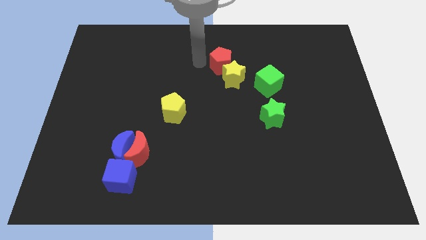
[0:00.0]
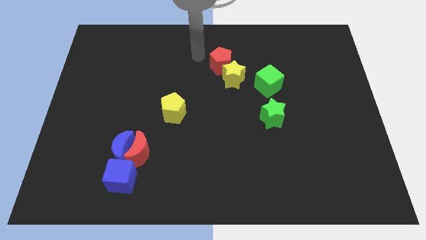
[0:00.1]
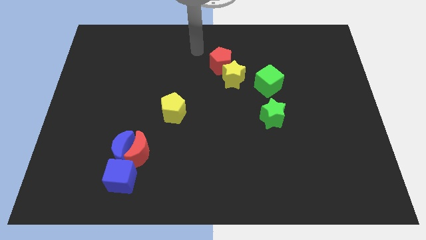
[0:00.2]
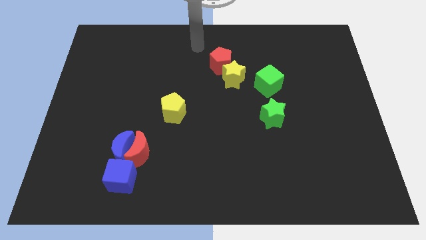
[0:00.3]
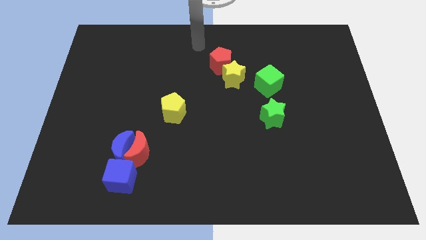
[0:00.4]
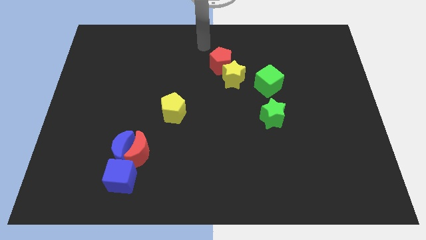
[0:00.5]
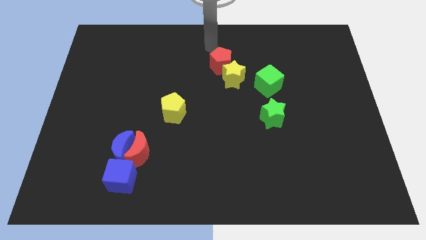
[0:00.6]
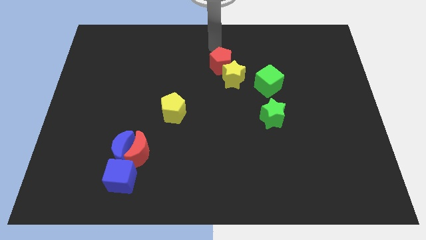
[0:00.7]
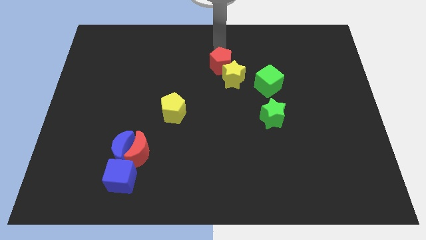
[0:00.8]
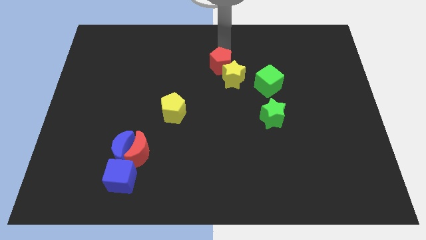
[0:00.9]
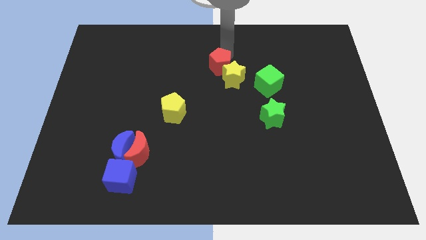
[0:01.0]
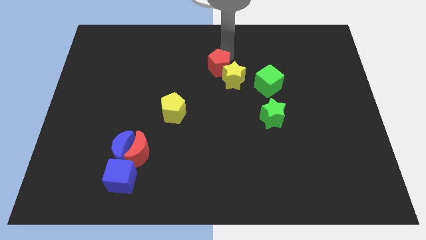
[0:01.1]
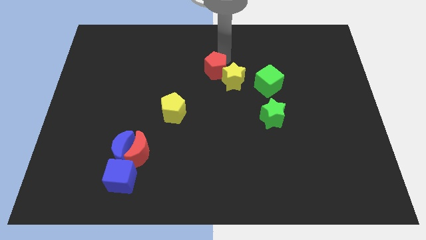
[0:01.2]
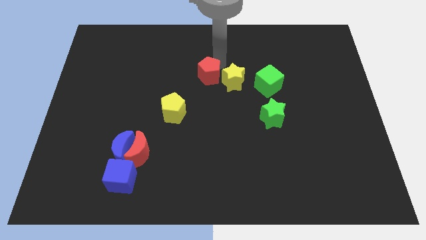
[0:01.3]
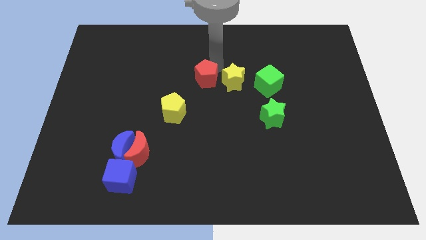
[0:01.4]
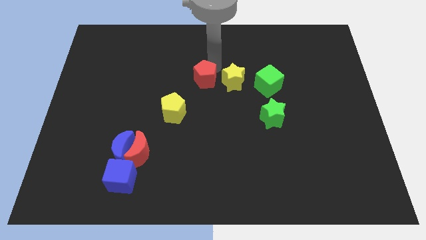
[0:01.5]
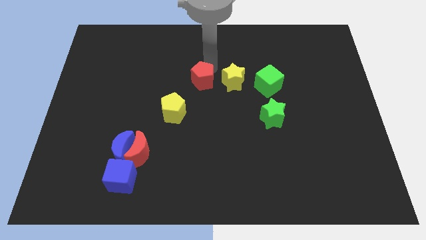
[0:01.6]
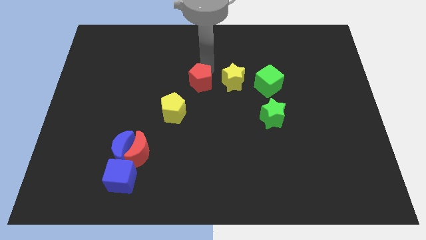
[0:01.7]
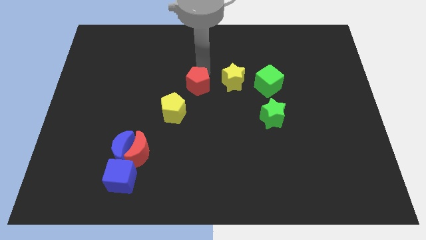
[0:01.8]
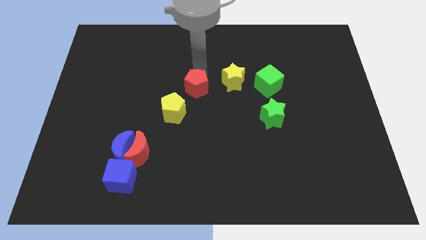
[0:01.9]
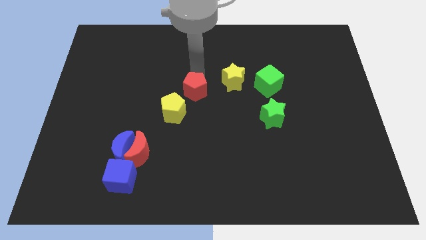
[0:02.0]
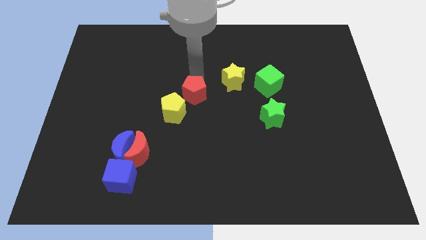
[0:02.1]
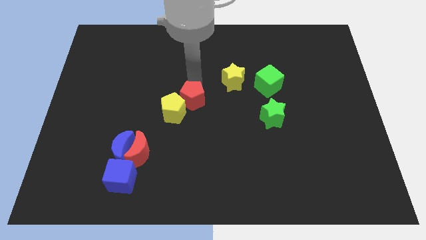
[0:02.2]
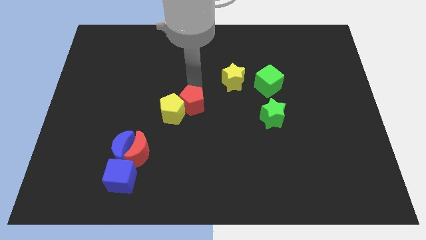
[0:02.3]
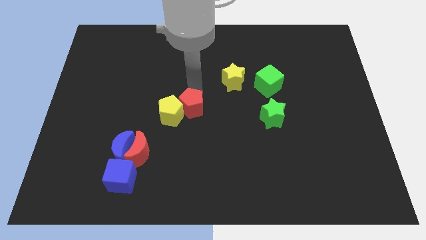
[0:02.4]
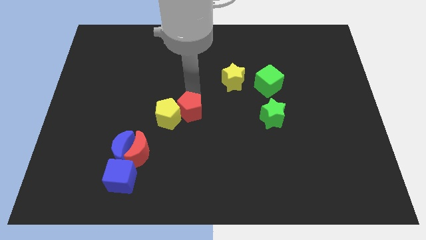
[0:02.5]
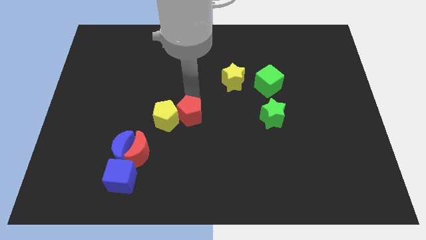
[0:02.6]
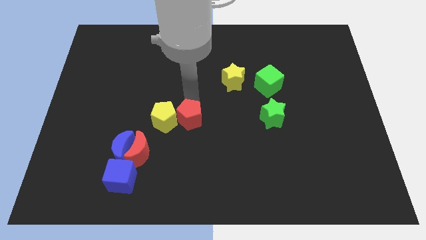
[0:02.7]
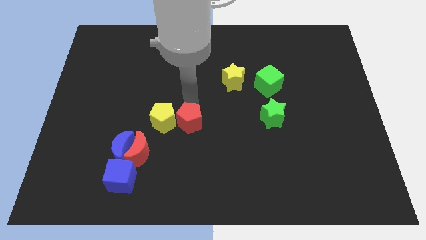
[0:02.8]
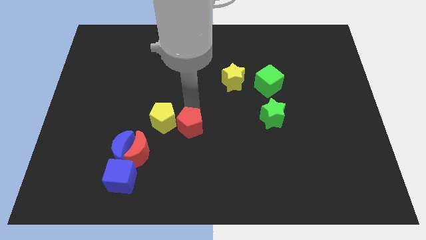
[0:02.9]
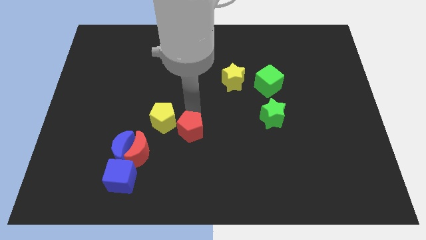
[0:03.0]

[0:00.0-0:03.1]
move the red pentagon near to the yellow pentagon

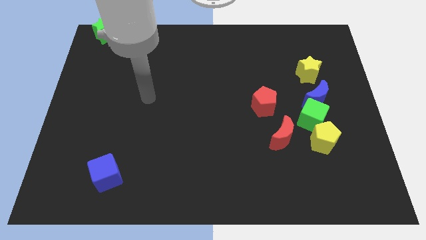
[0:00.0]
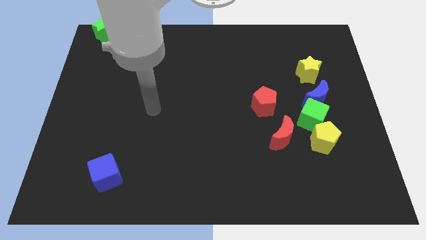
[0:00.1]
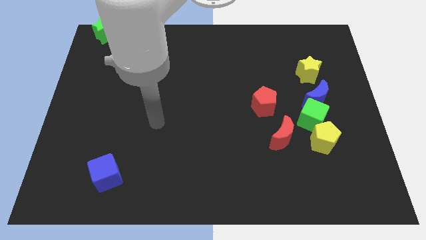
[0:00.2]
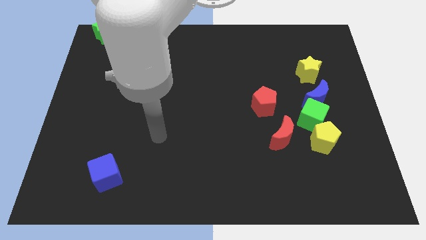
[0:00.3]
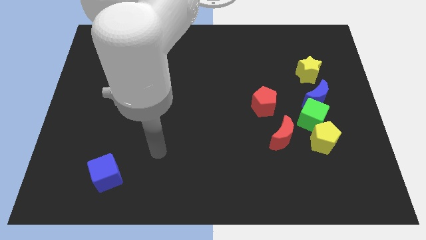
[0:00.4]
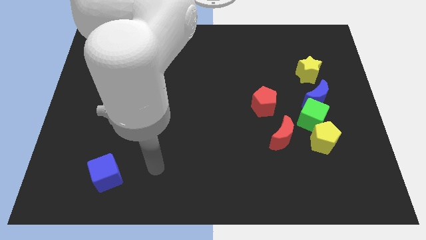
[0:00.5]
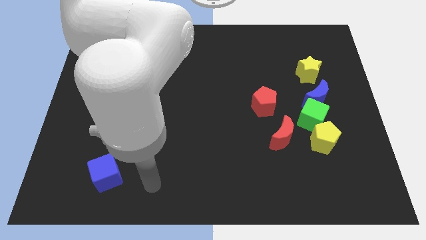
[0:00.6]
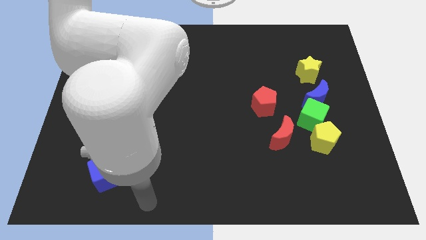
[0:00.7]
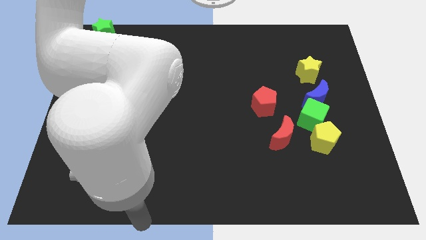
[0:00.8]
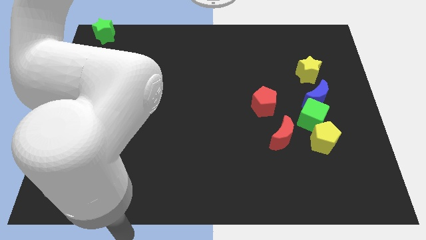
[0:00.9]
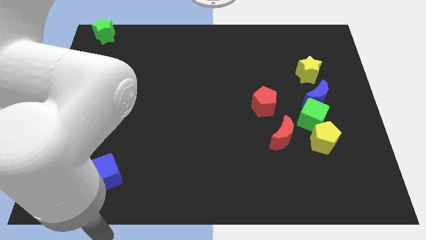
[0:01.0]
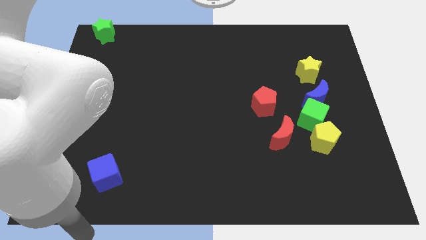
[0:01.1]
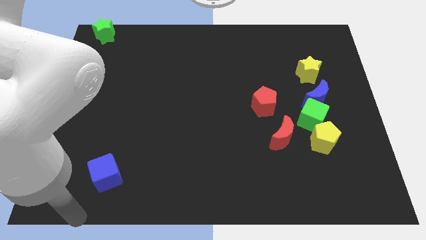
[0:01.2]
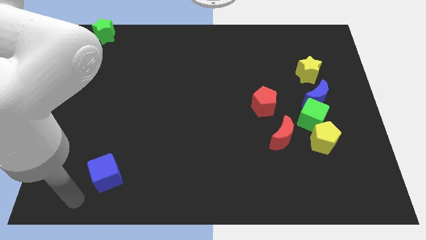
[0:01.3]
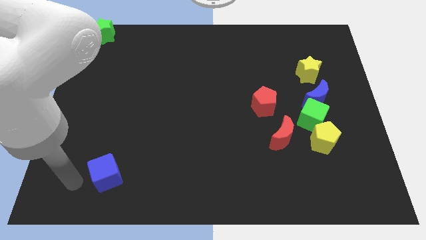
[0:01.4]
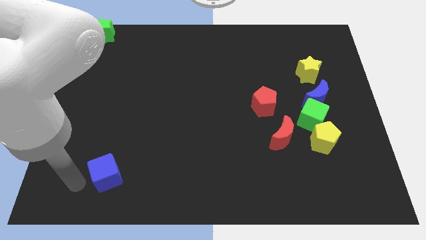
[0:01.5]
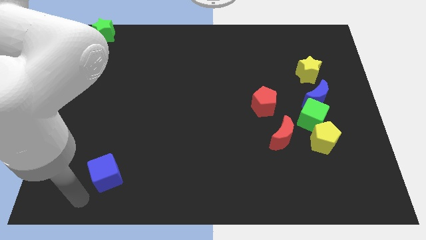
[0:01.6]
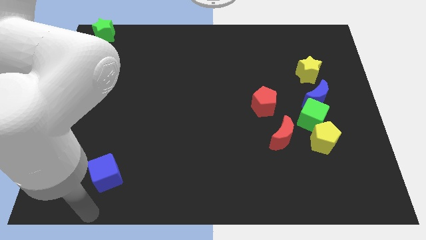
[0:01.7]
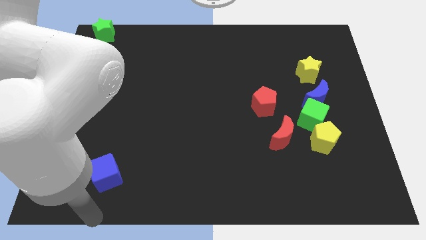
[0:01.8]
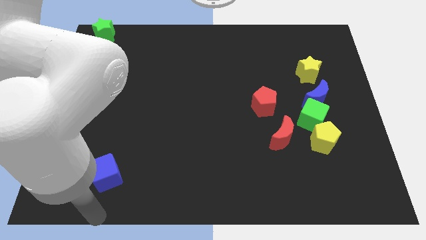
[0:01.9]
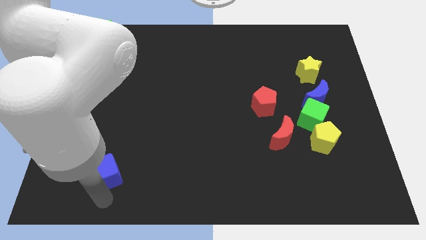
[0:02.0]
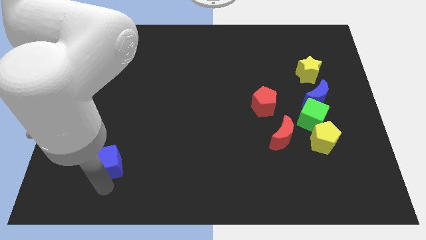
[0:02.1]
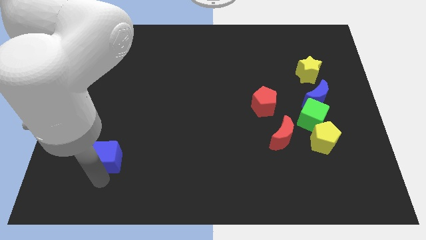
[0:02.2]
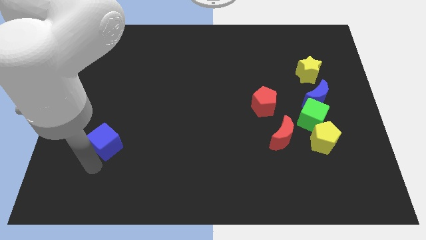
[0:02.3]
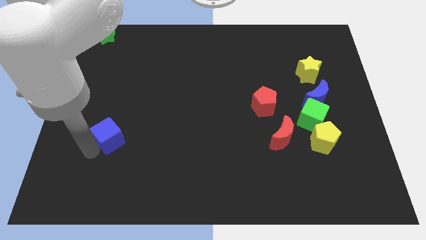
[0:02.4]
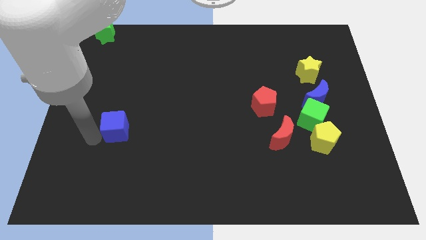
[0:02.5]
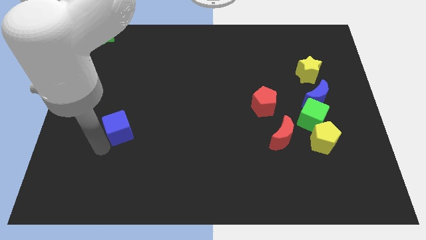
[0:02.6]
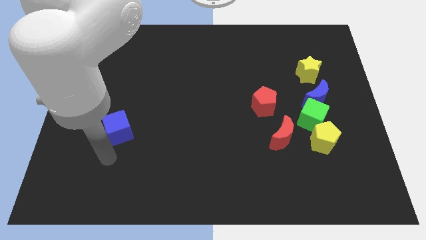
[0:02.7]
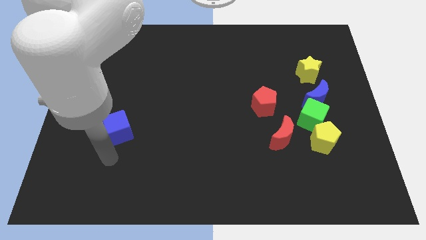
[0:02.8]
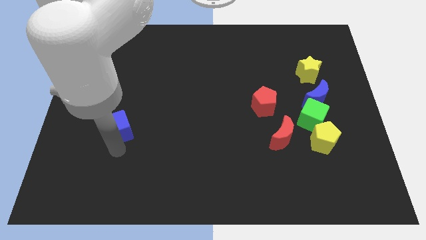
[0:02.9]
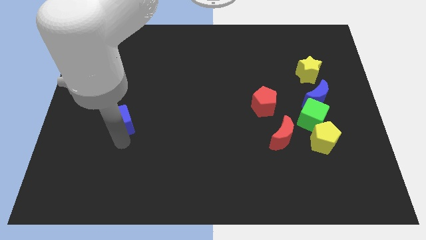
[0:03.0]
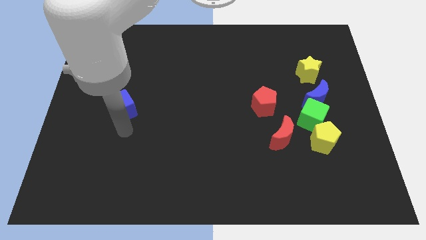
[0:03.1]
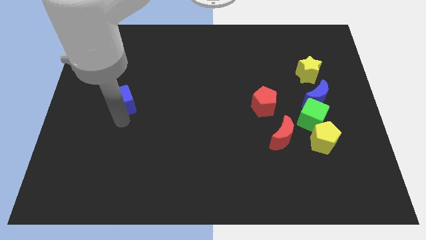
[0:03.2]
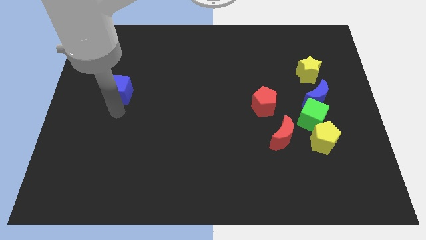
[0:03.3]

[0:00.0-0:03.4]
move the blue cube left to the red pentagon

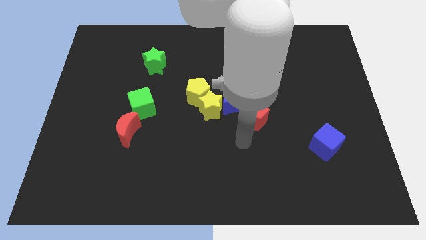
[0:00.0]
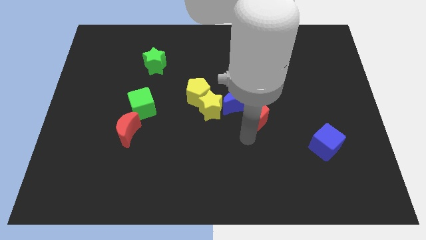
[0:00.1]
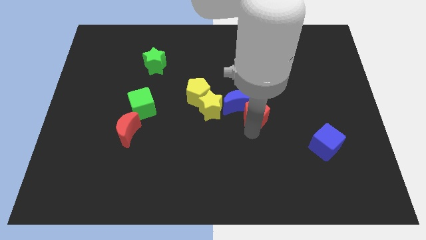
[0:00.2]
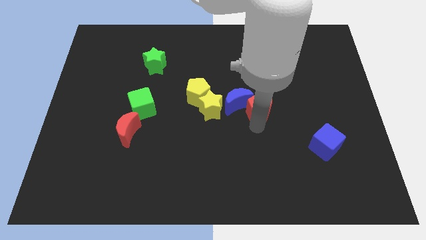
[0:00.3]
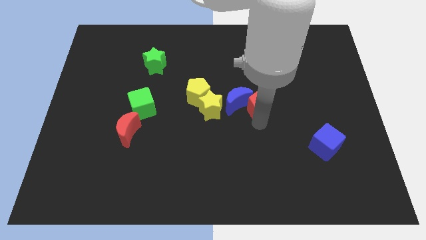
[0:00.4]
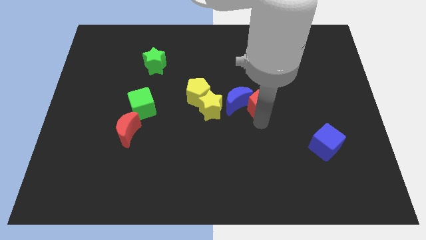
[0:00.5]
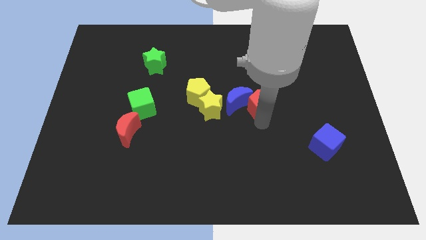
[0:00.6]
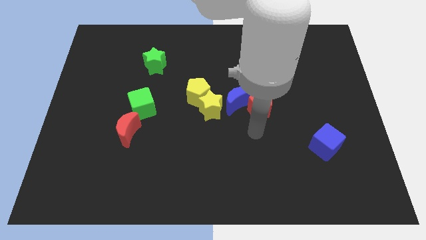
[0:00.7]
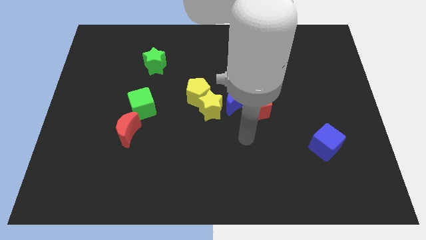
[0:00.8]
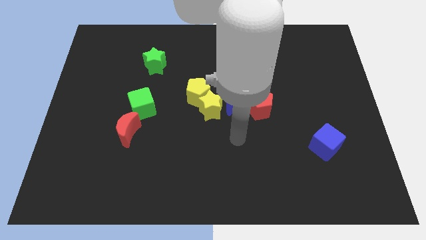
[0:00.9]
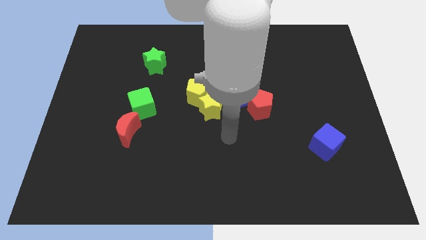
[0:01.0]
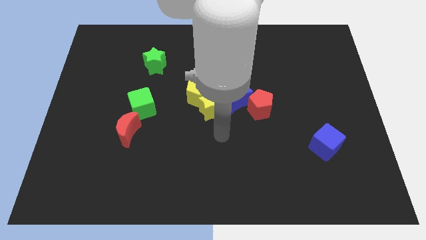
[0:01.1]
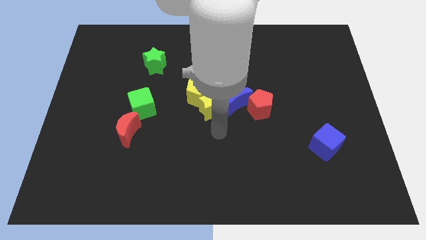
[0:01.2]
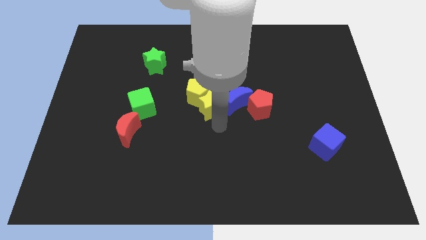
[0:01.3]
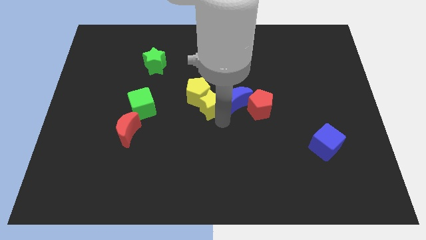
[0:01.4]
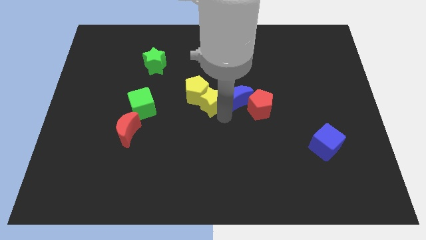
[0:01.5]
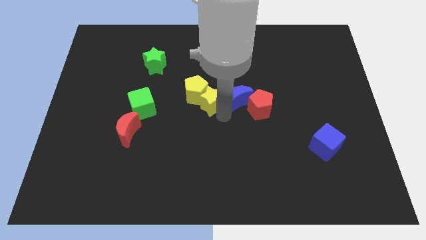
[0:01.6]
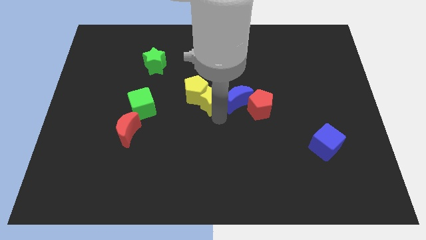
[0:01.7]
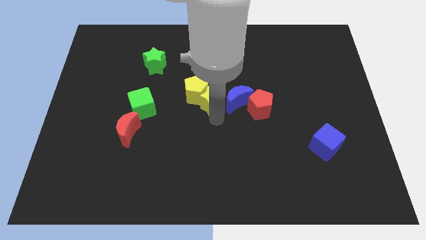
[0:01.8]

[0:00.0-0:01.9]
tap the yellow star slightly towards the top side of the board

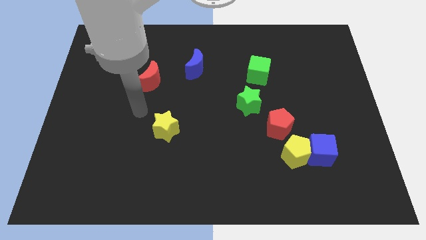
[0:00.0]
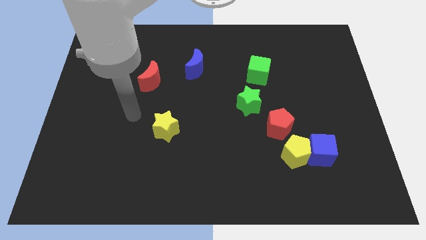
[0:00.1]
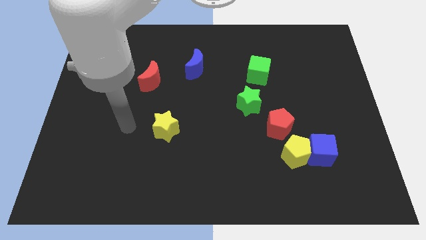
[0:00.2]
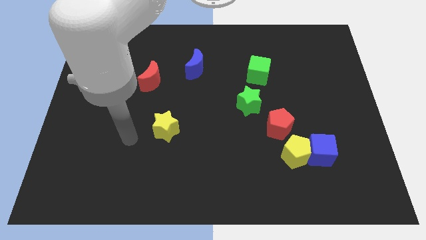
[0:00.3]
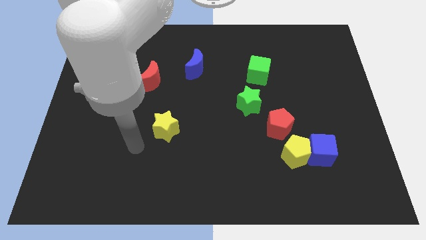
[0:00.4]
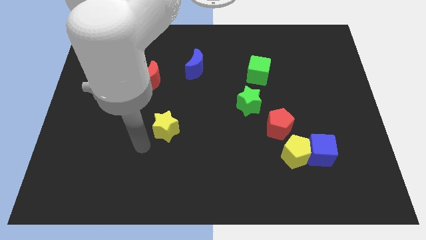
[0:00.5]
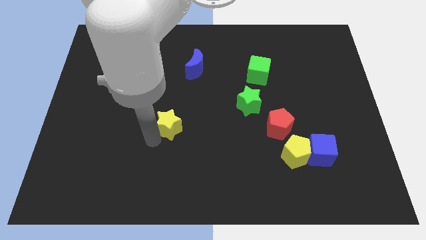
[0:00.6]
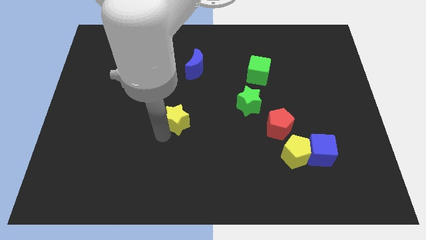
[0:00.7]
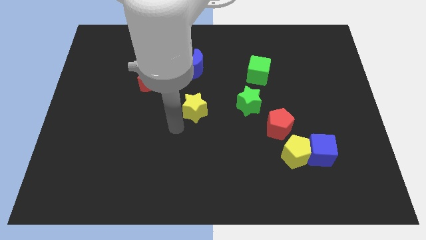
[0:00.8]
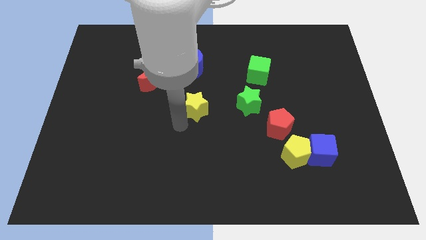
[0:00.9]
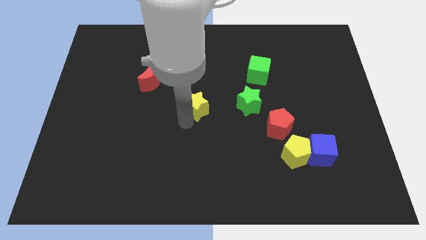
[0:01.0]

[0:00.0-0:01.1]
place the yellow star below the blue crescent
